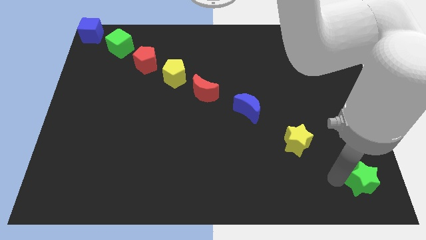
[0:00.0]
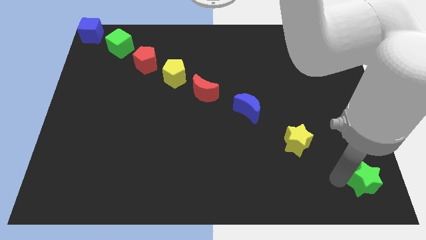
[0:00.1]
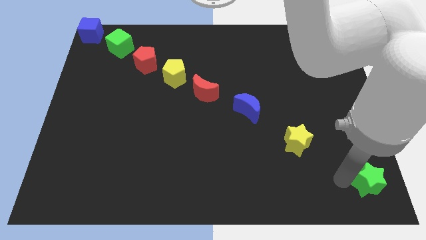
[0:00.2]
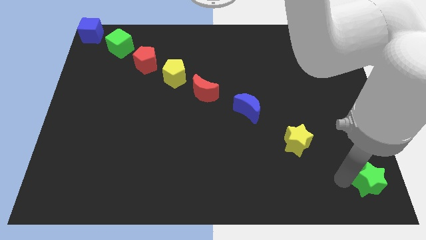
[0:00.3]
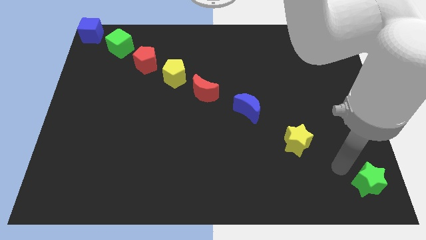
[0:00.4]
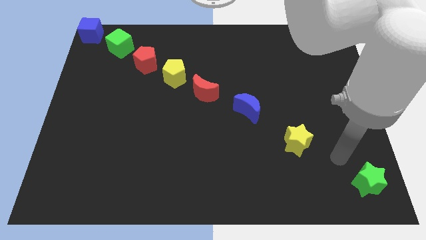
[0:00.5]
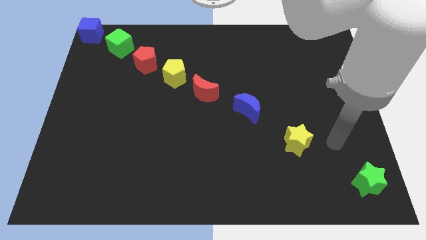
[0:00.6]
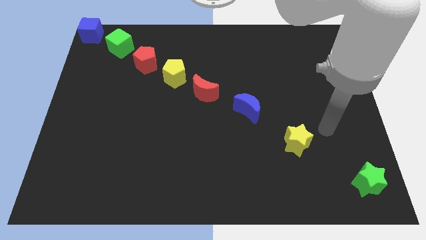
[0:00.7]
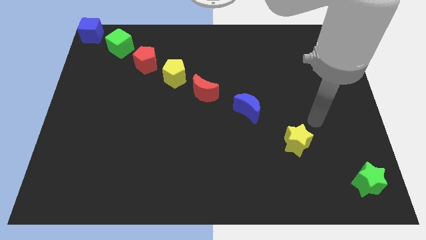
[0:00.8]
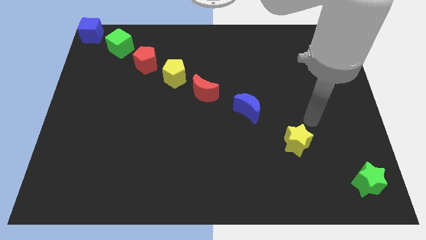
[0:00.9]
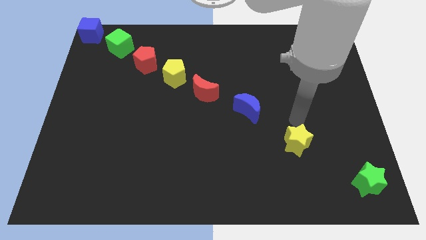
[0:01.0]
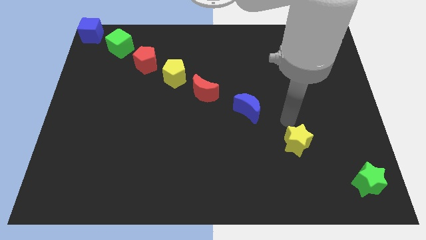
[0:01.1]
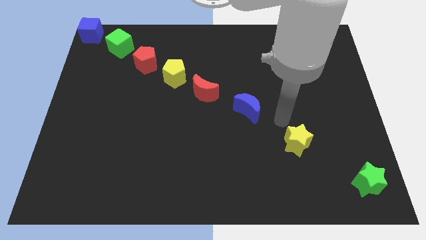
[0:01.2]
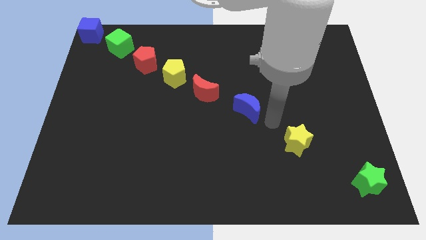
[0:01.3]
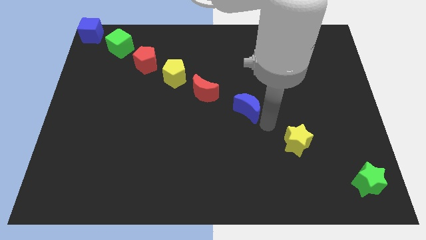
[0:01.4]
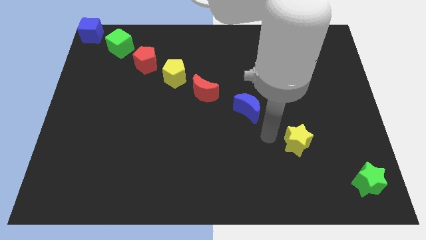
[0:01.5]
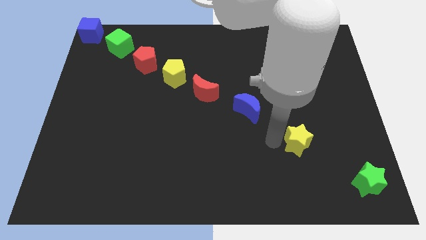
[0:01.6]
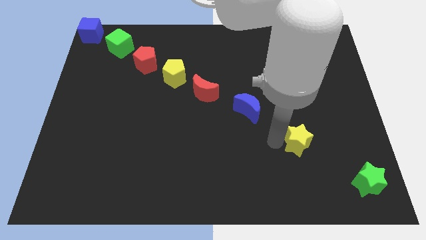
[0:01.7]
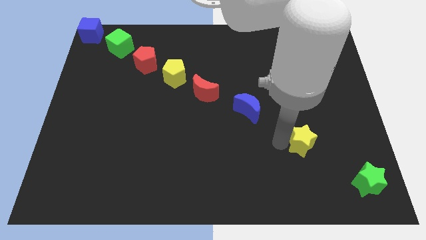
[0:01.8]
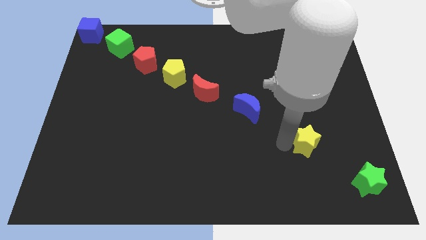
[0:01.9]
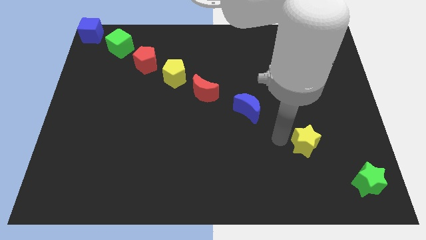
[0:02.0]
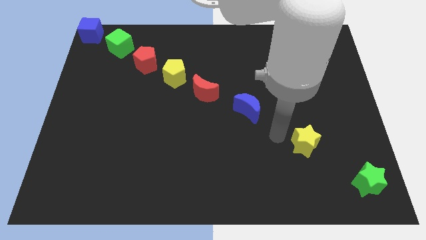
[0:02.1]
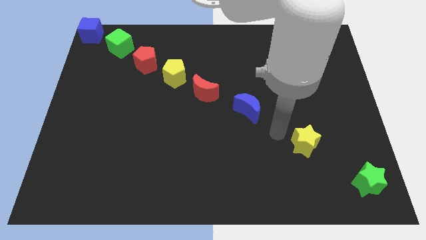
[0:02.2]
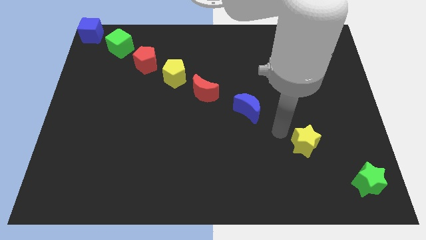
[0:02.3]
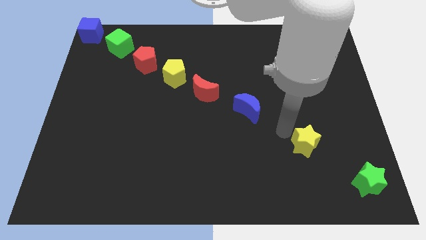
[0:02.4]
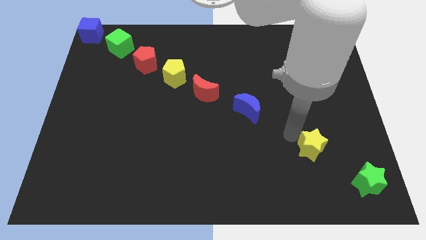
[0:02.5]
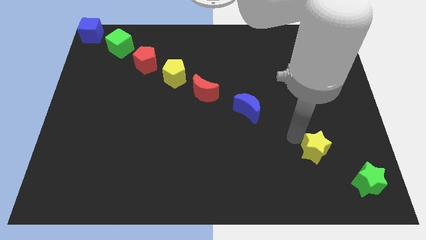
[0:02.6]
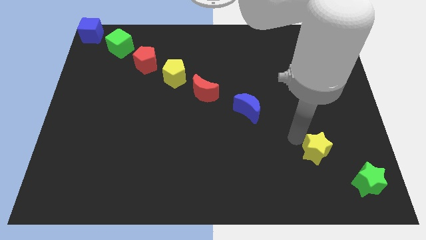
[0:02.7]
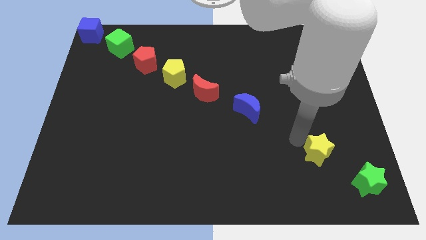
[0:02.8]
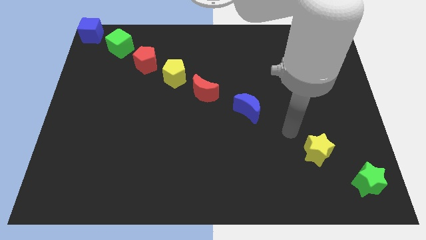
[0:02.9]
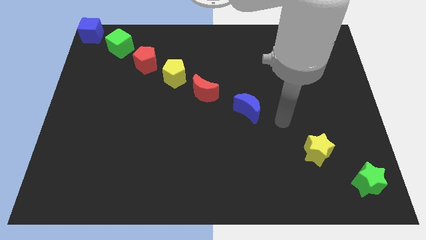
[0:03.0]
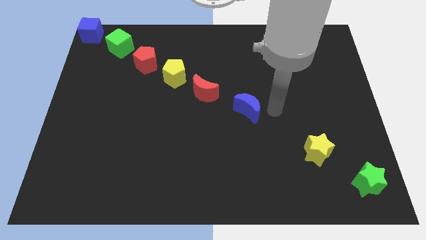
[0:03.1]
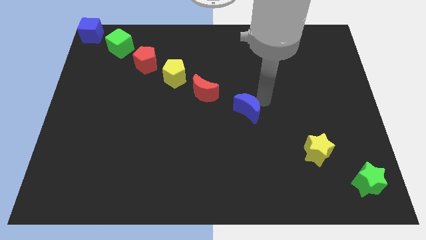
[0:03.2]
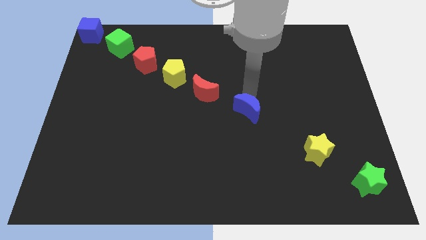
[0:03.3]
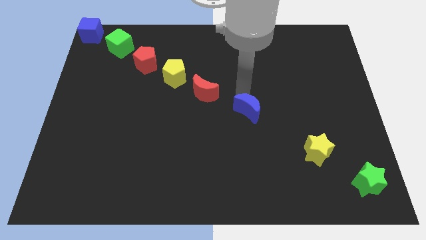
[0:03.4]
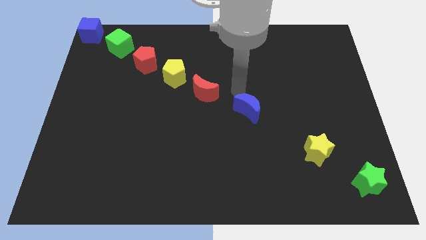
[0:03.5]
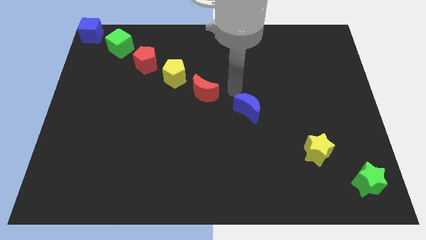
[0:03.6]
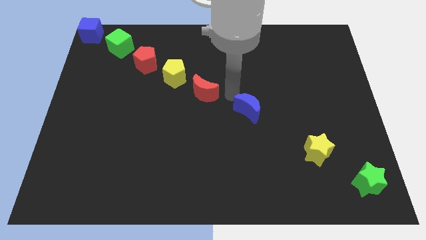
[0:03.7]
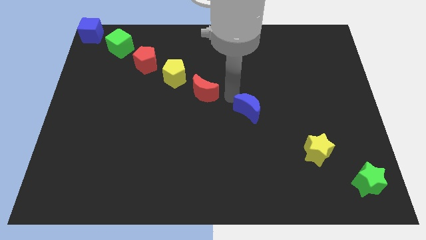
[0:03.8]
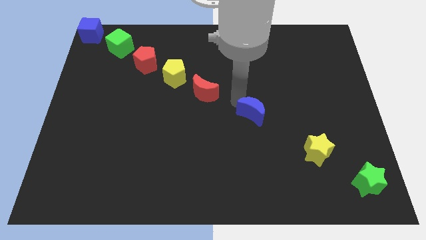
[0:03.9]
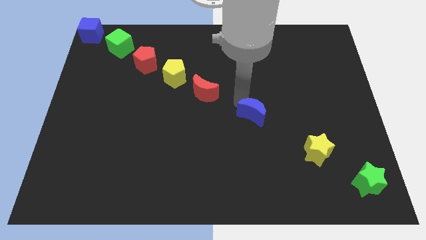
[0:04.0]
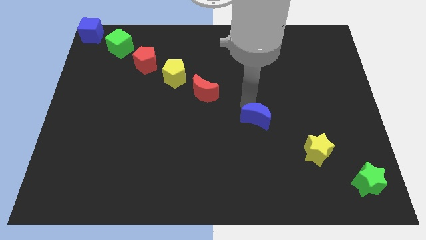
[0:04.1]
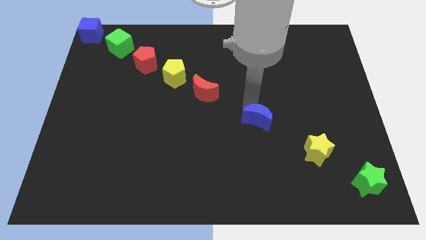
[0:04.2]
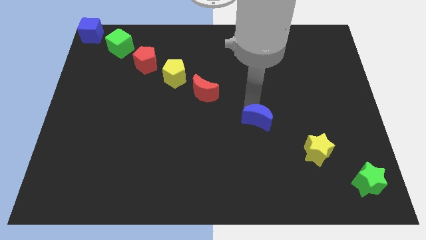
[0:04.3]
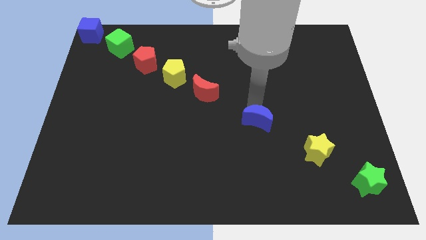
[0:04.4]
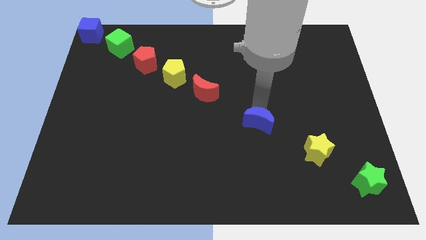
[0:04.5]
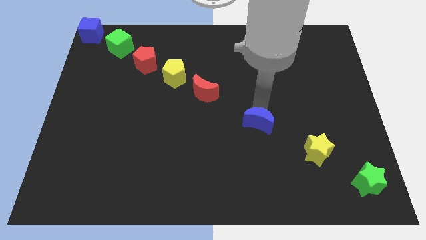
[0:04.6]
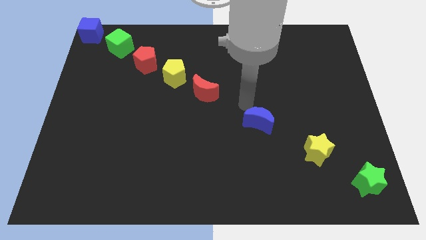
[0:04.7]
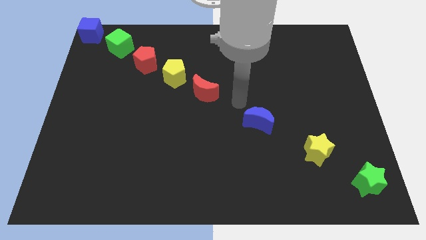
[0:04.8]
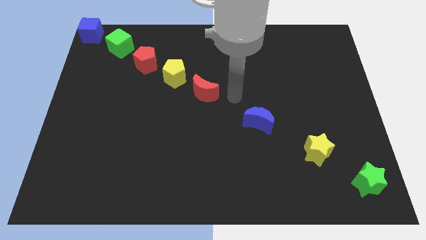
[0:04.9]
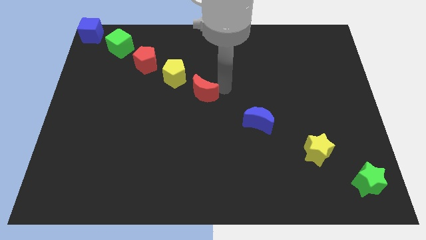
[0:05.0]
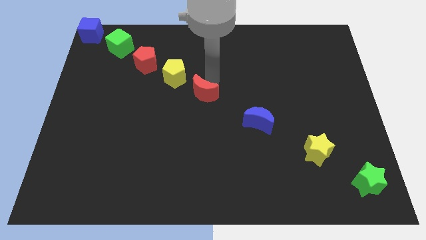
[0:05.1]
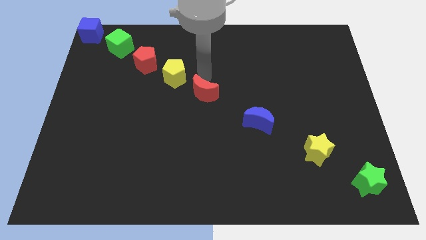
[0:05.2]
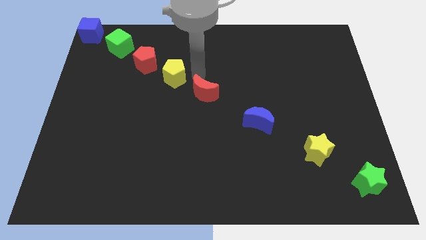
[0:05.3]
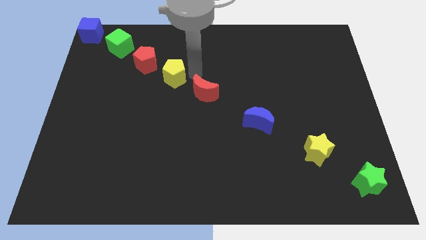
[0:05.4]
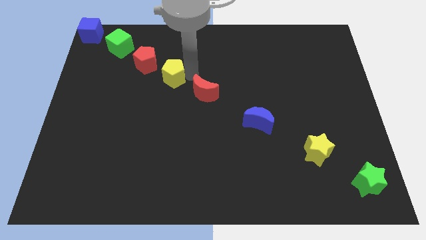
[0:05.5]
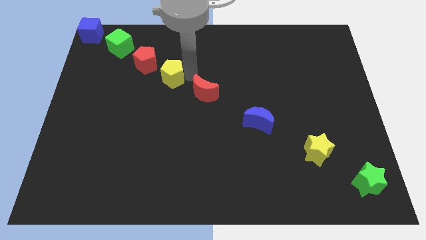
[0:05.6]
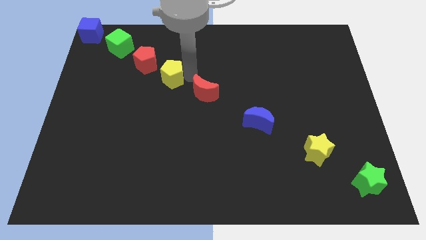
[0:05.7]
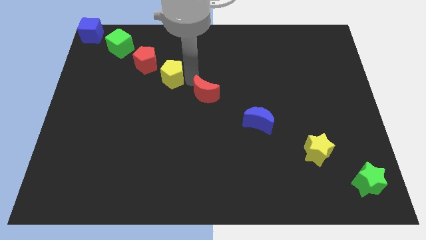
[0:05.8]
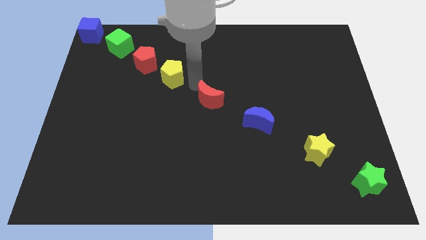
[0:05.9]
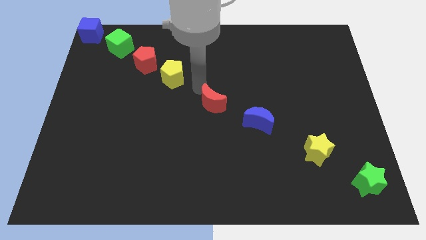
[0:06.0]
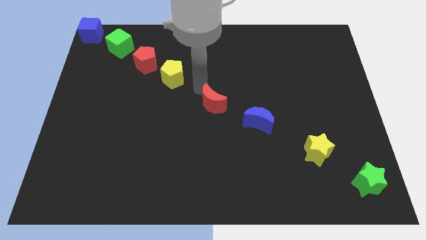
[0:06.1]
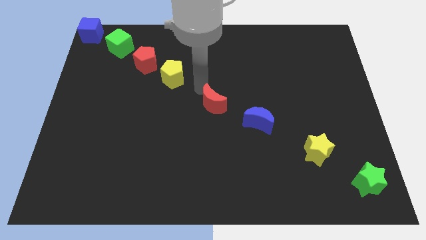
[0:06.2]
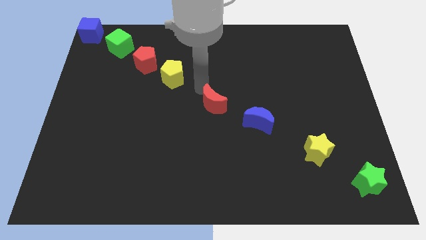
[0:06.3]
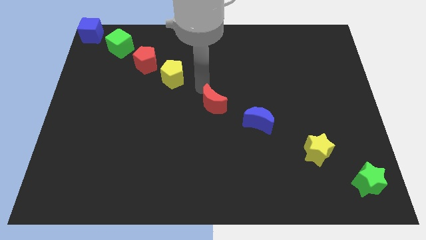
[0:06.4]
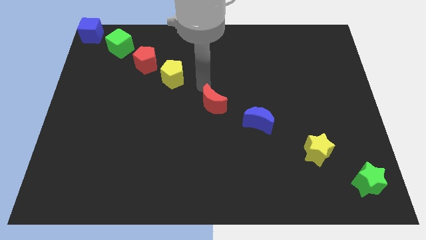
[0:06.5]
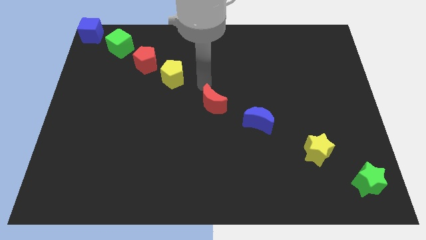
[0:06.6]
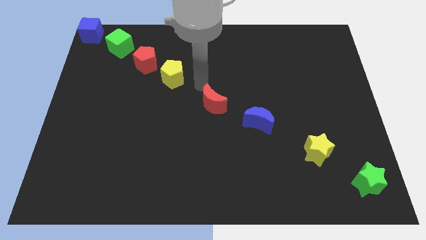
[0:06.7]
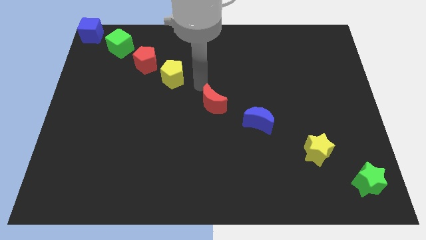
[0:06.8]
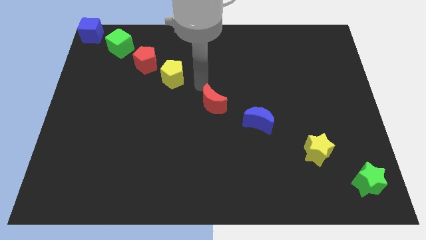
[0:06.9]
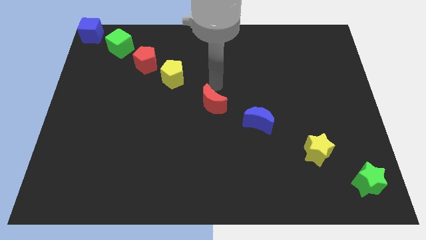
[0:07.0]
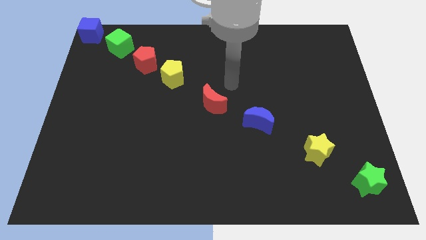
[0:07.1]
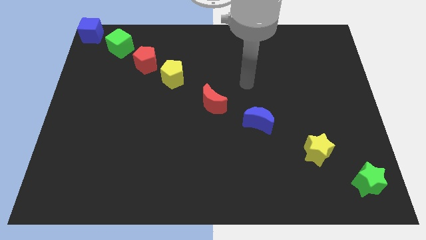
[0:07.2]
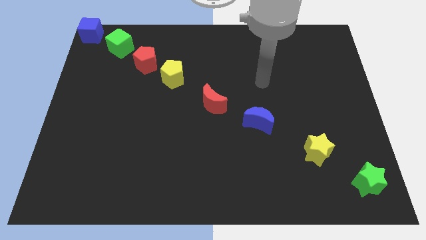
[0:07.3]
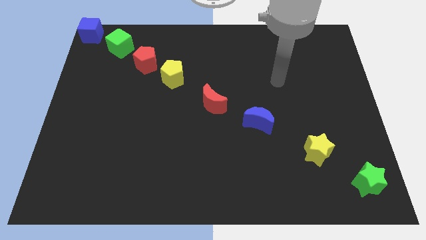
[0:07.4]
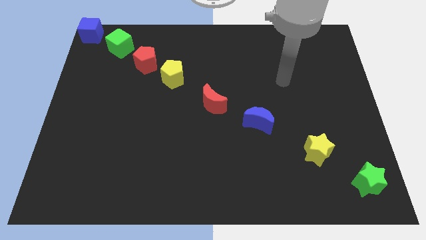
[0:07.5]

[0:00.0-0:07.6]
adjust the blocks to form a diagonal line

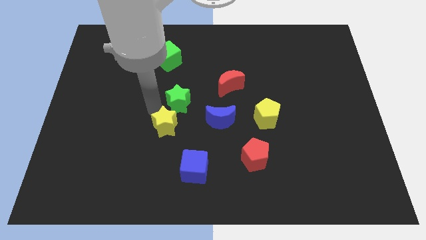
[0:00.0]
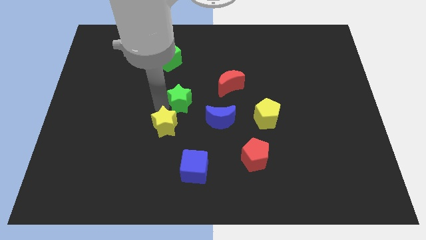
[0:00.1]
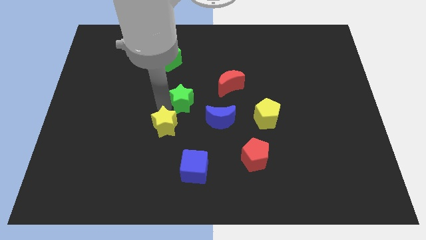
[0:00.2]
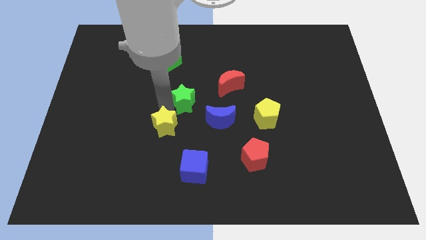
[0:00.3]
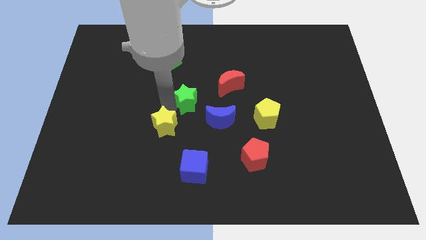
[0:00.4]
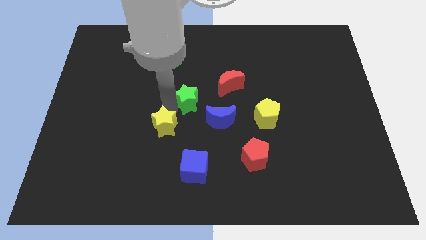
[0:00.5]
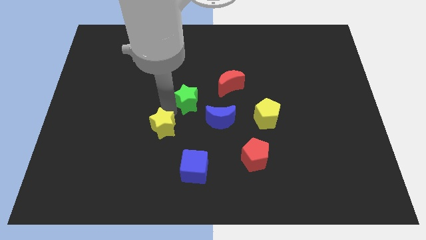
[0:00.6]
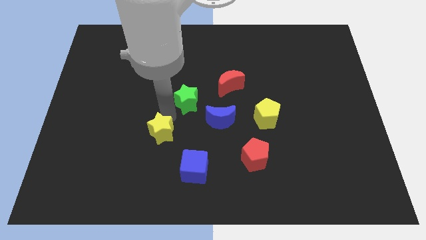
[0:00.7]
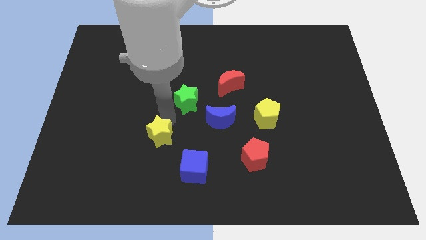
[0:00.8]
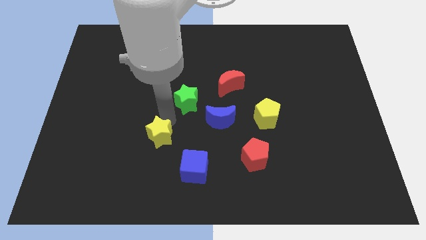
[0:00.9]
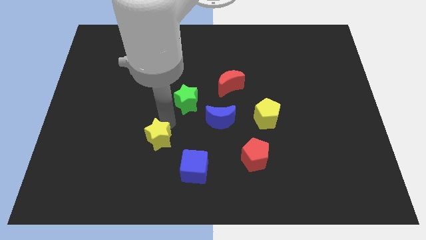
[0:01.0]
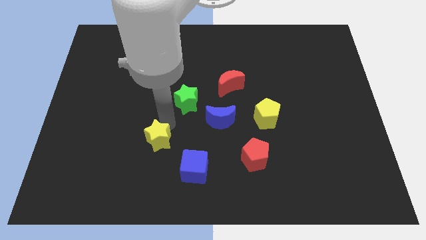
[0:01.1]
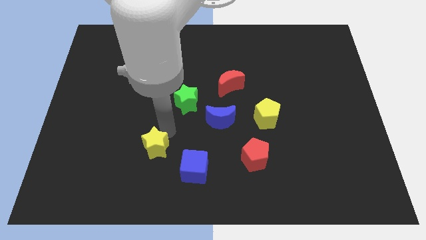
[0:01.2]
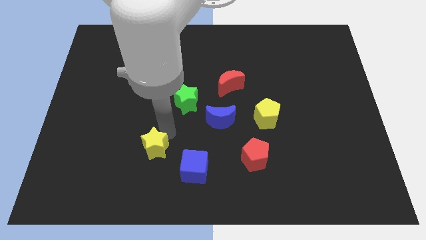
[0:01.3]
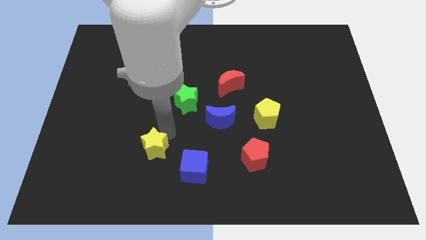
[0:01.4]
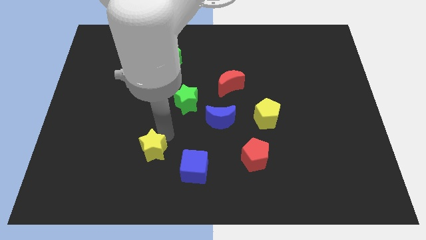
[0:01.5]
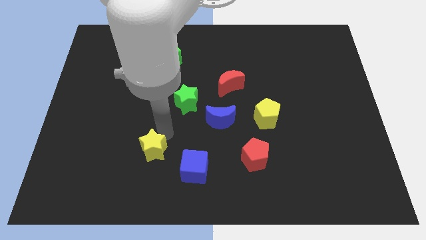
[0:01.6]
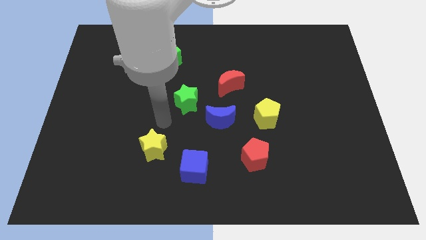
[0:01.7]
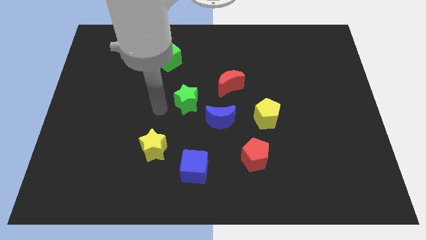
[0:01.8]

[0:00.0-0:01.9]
push the yellow star towards the diagonal top left of the blue cube
